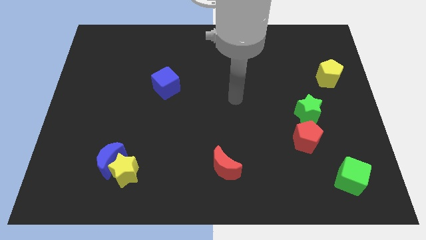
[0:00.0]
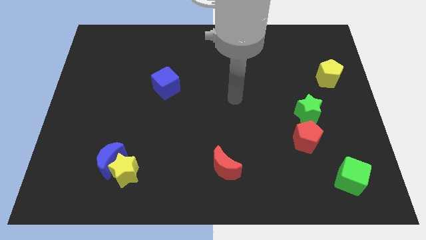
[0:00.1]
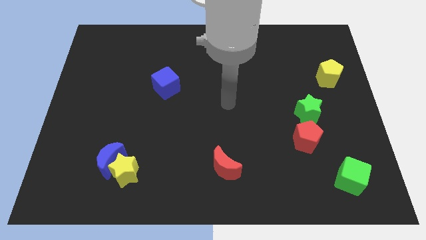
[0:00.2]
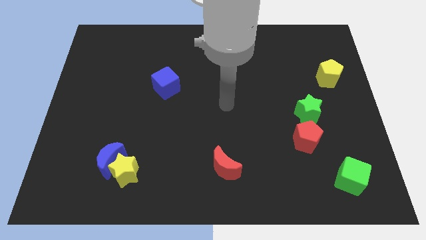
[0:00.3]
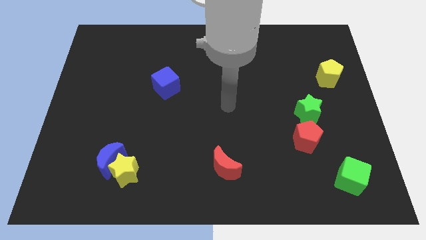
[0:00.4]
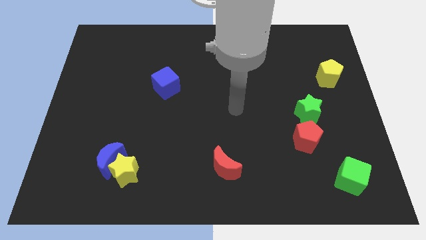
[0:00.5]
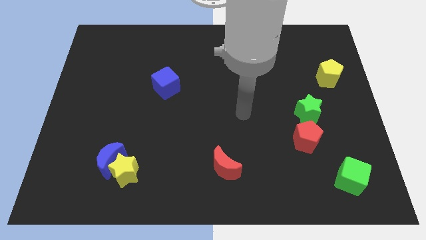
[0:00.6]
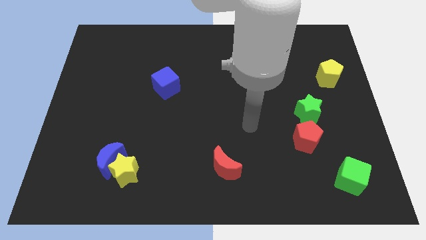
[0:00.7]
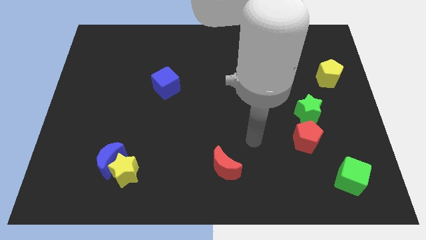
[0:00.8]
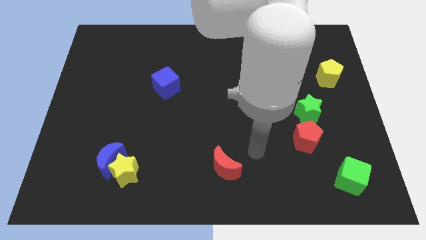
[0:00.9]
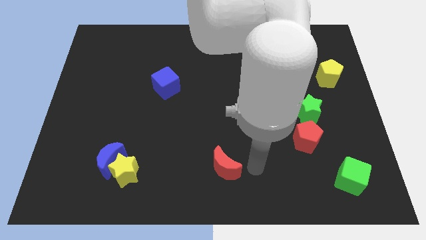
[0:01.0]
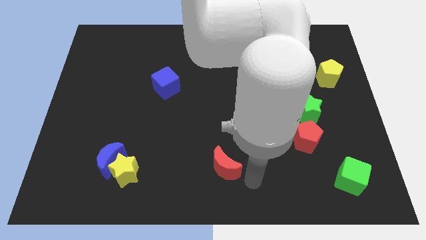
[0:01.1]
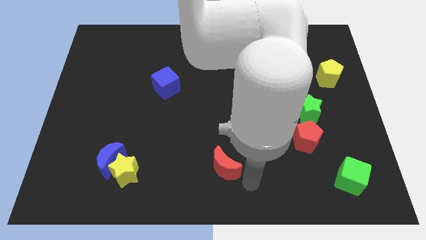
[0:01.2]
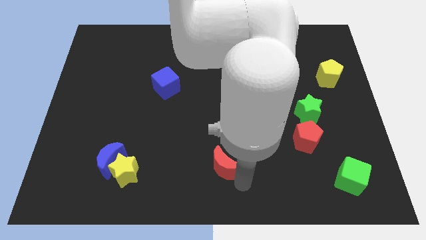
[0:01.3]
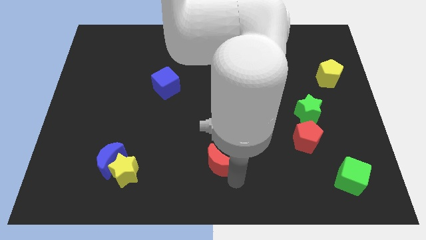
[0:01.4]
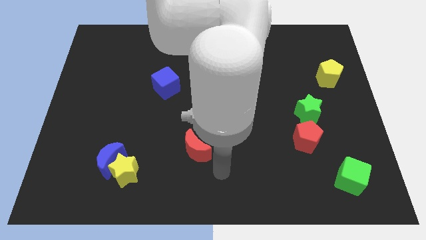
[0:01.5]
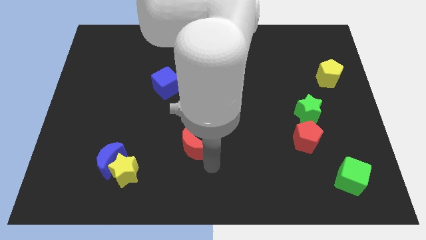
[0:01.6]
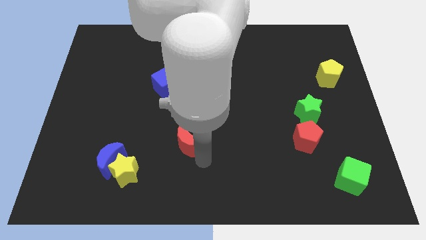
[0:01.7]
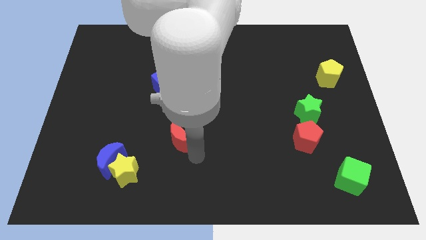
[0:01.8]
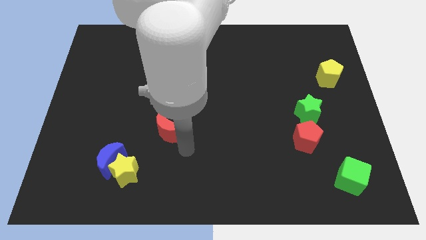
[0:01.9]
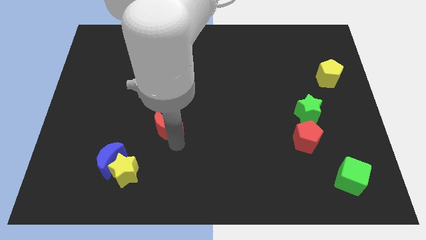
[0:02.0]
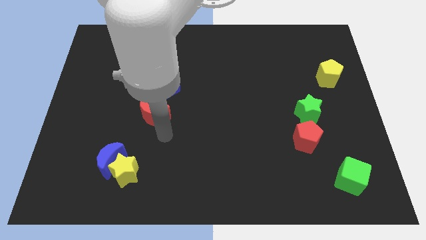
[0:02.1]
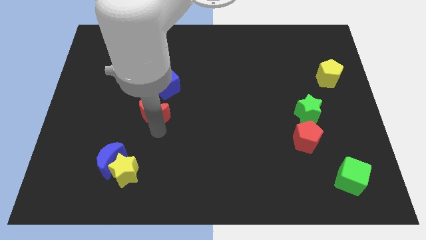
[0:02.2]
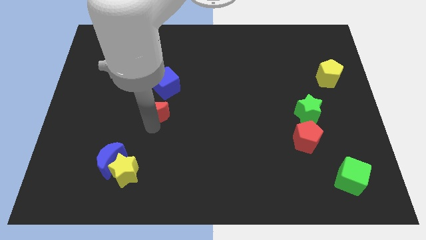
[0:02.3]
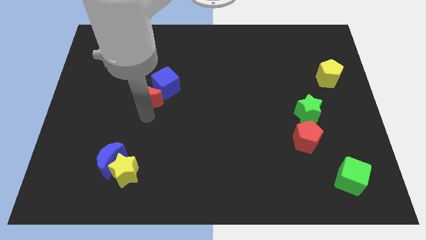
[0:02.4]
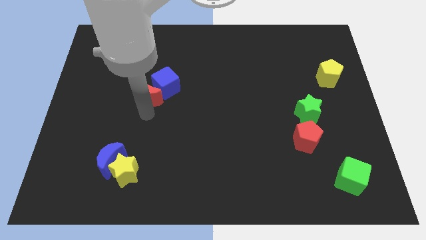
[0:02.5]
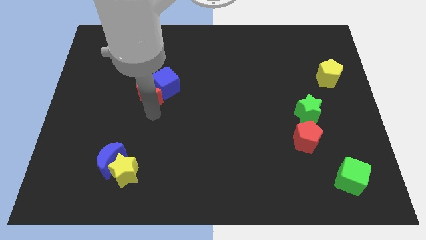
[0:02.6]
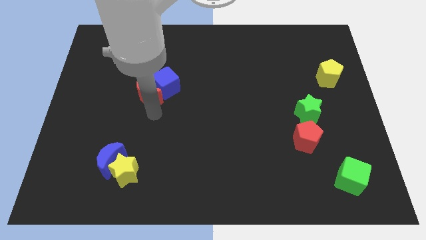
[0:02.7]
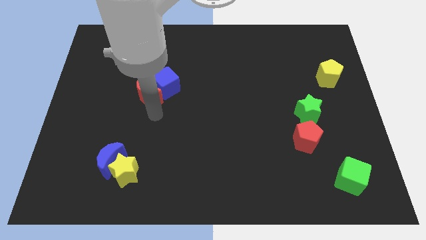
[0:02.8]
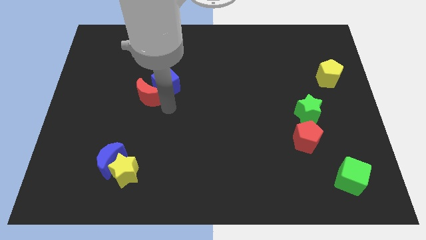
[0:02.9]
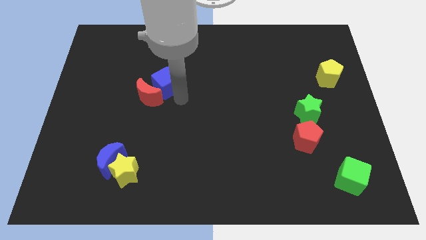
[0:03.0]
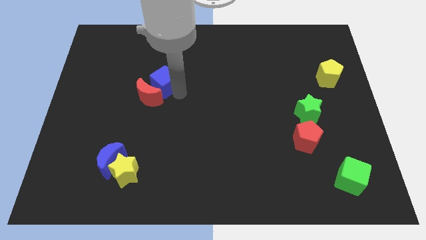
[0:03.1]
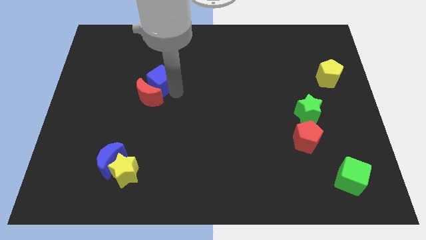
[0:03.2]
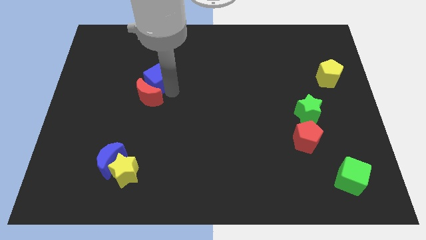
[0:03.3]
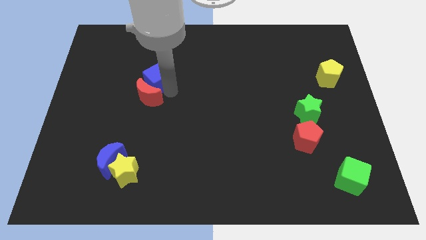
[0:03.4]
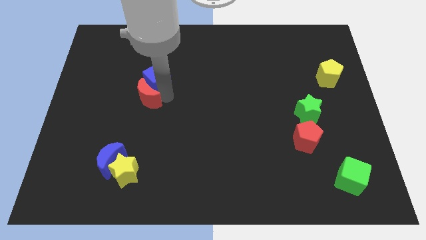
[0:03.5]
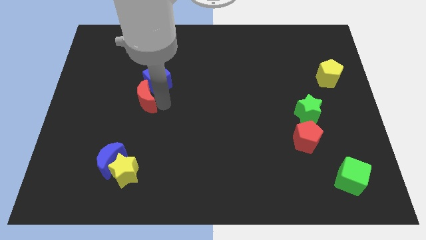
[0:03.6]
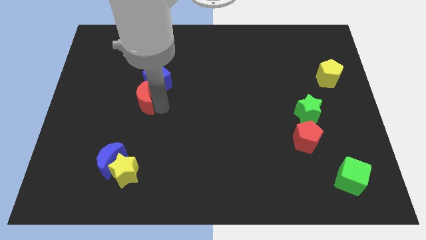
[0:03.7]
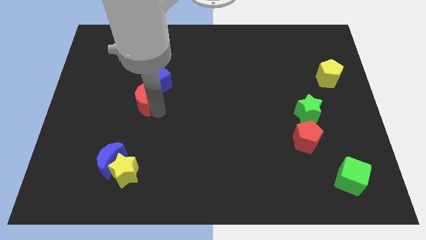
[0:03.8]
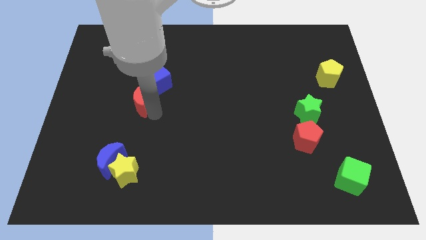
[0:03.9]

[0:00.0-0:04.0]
push the red moon to the bottom left of the blue cube

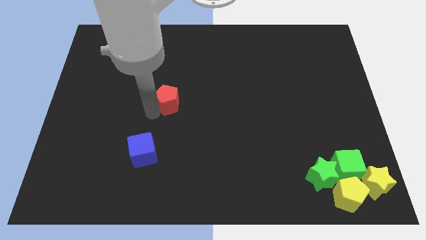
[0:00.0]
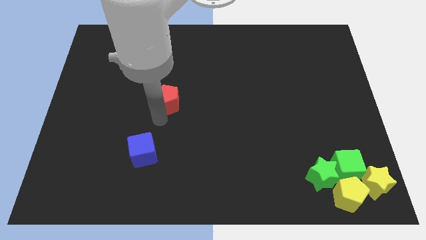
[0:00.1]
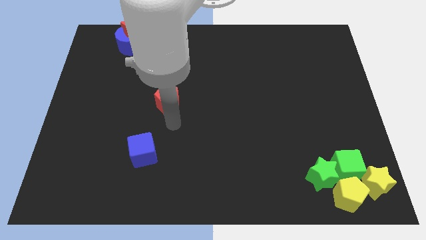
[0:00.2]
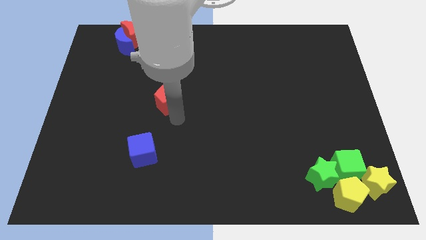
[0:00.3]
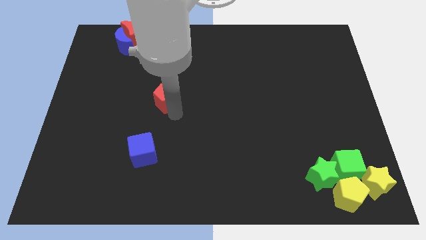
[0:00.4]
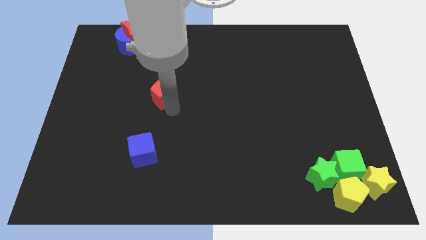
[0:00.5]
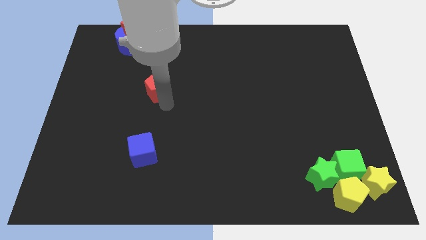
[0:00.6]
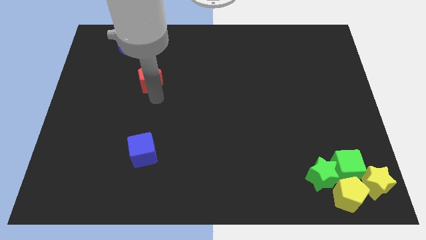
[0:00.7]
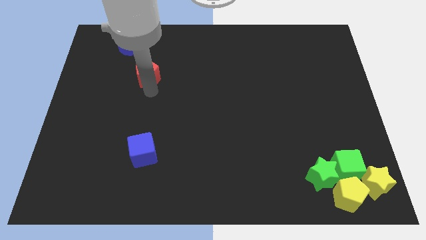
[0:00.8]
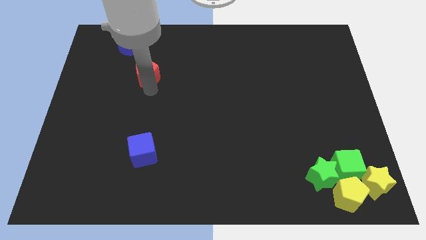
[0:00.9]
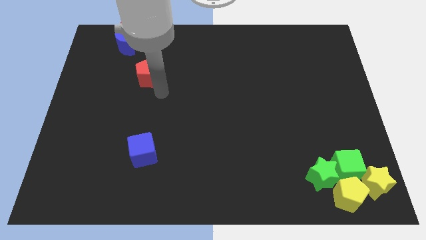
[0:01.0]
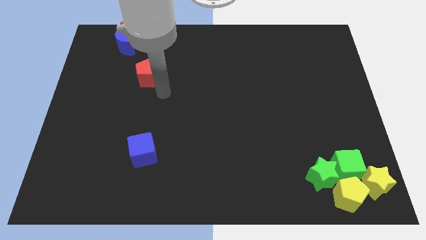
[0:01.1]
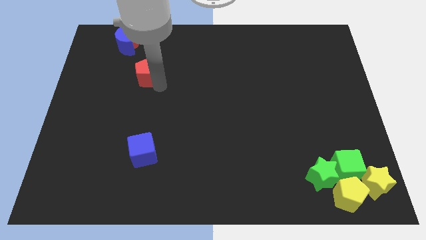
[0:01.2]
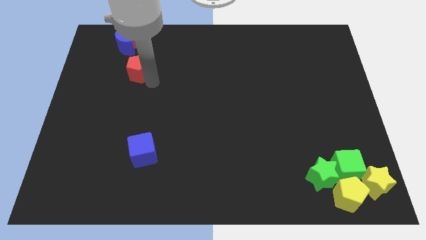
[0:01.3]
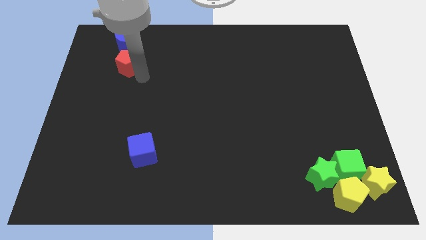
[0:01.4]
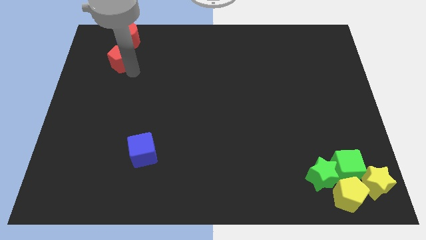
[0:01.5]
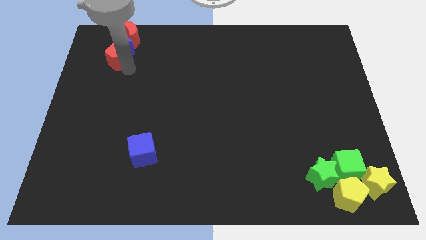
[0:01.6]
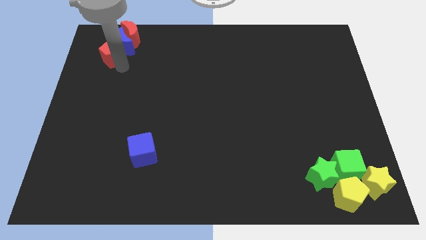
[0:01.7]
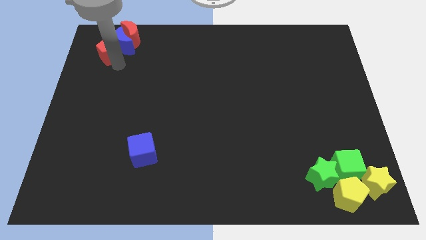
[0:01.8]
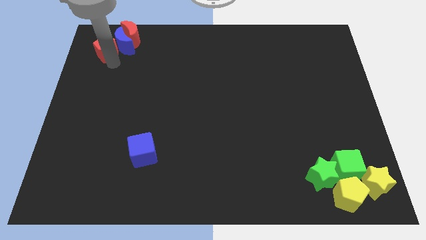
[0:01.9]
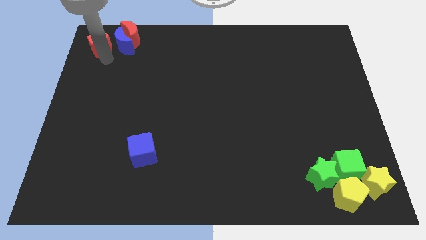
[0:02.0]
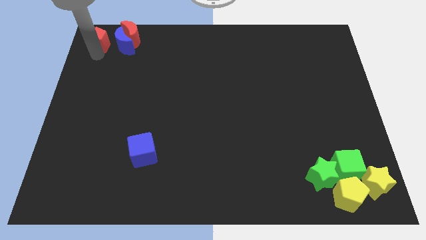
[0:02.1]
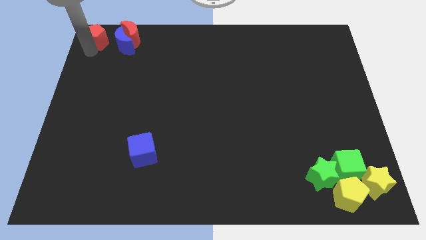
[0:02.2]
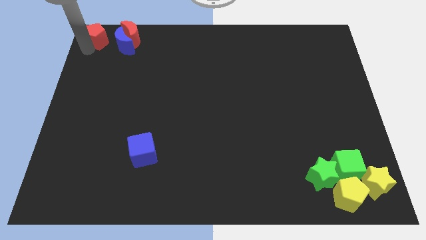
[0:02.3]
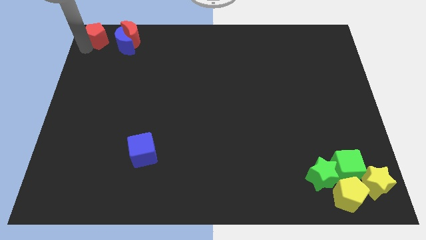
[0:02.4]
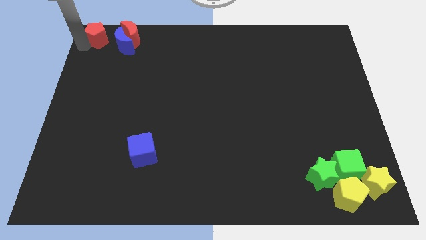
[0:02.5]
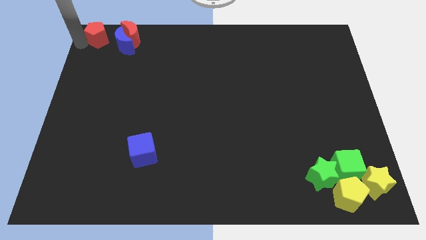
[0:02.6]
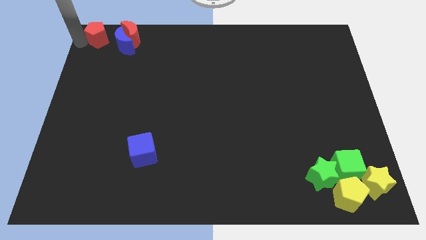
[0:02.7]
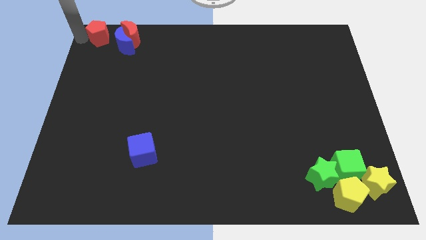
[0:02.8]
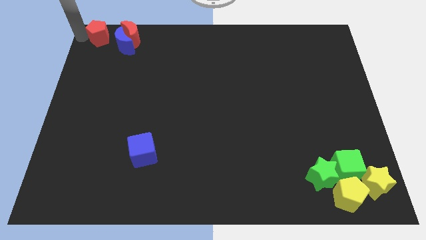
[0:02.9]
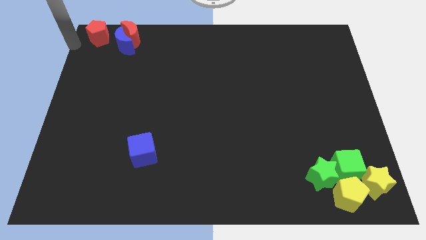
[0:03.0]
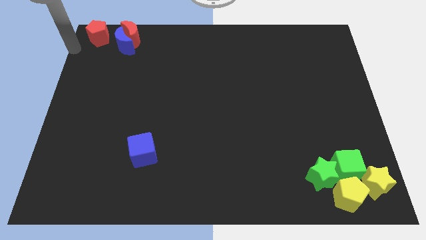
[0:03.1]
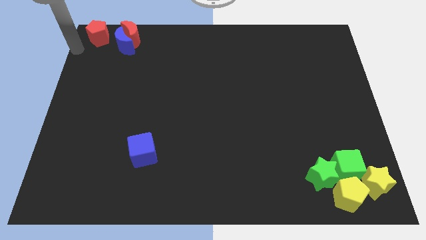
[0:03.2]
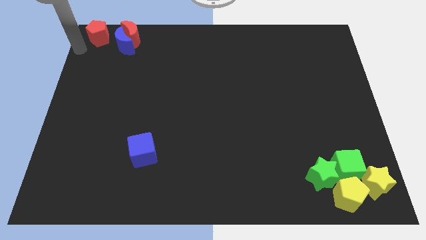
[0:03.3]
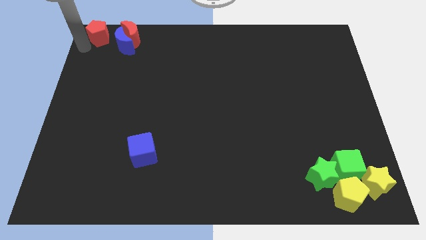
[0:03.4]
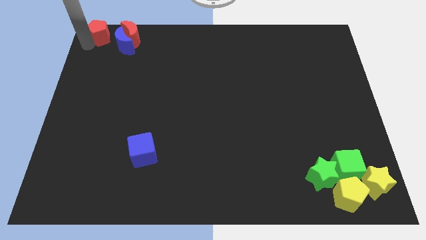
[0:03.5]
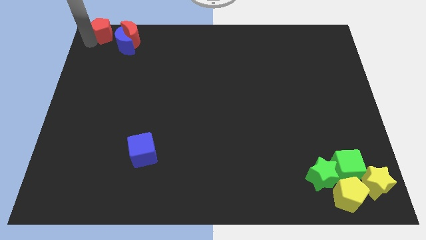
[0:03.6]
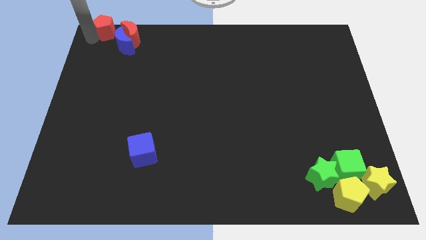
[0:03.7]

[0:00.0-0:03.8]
push red pentagon towards top left beside red crescent

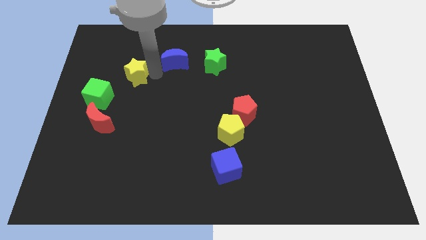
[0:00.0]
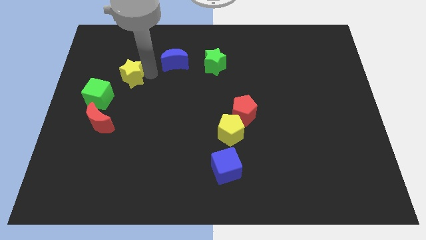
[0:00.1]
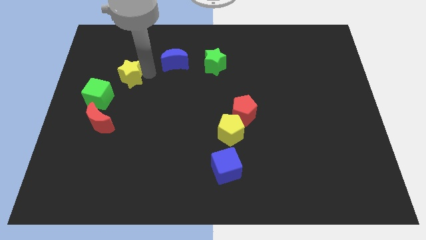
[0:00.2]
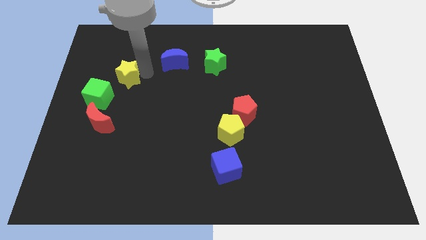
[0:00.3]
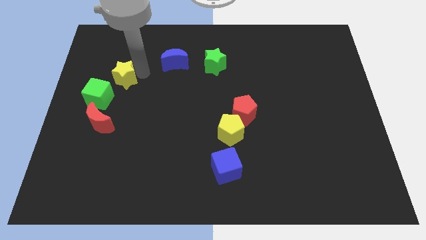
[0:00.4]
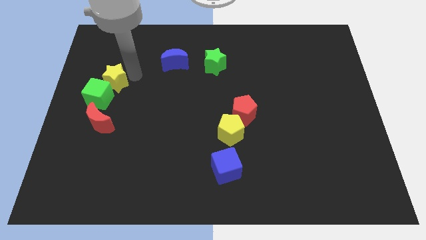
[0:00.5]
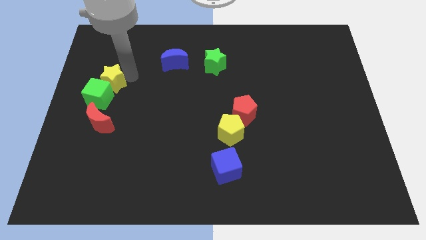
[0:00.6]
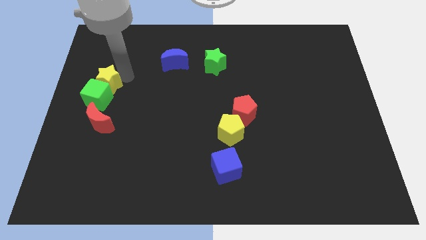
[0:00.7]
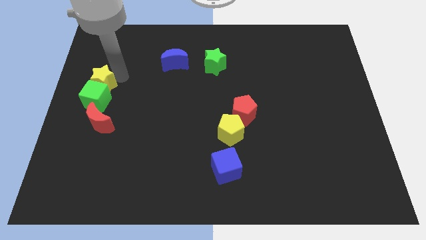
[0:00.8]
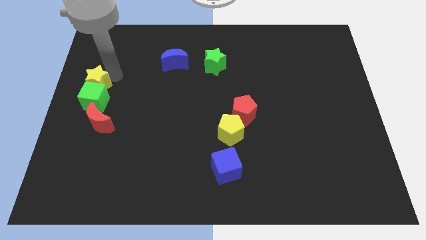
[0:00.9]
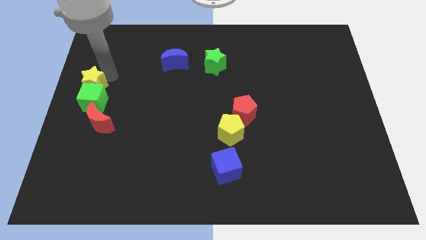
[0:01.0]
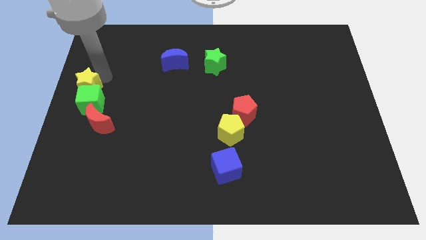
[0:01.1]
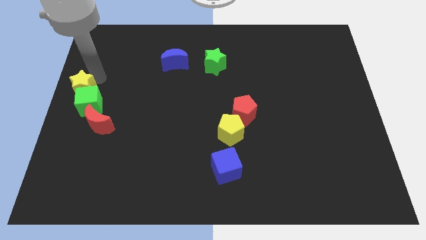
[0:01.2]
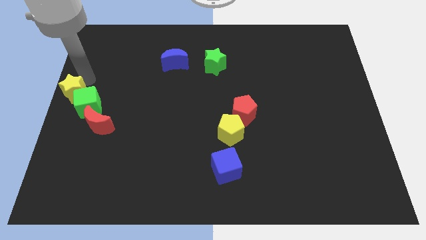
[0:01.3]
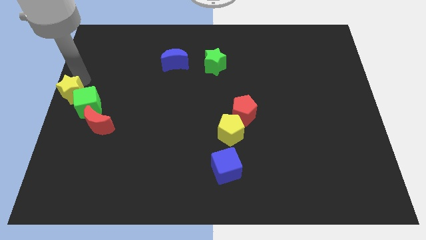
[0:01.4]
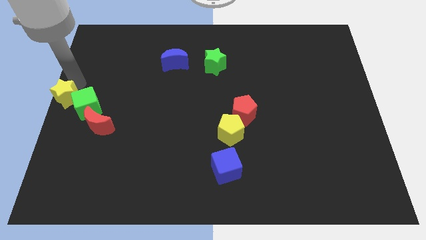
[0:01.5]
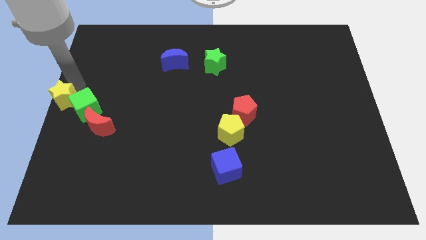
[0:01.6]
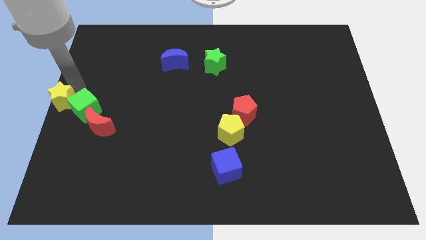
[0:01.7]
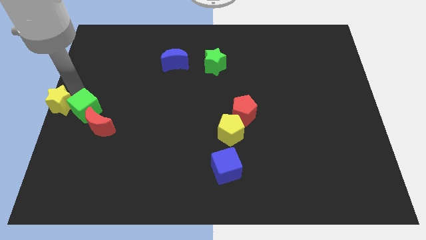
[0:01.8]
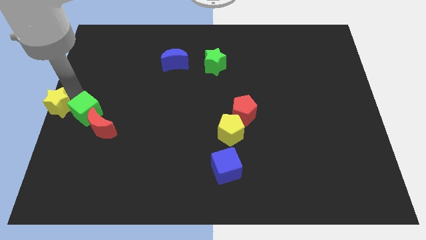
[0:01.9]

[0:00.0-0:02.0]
place the yellow star to the left center corner of the board
